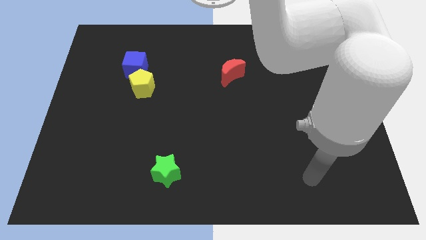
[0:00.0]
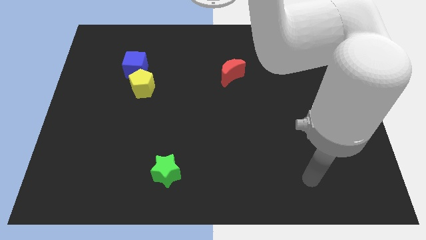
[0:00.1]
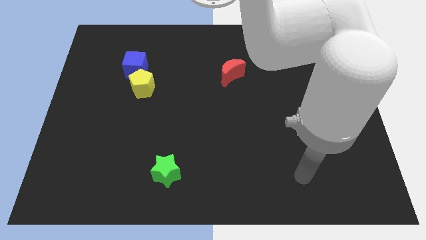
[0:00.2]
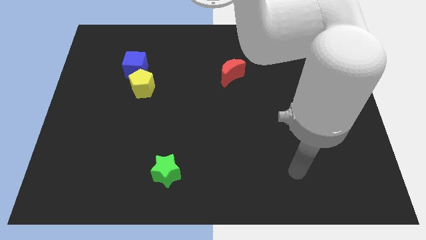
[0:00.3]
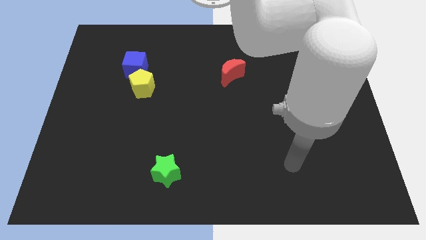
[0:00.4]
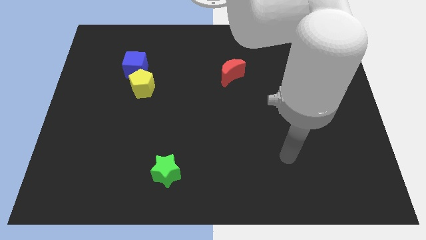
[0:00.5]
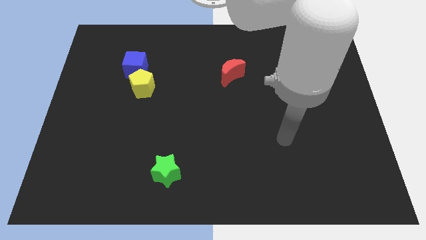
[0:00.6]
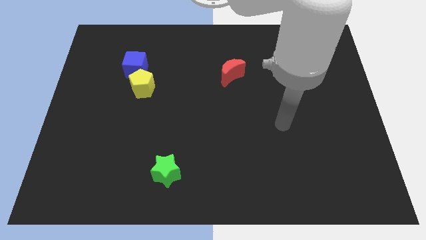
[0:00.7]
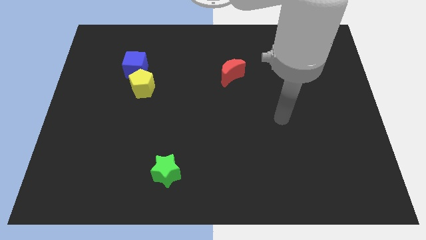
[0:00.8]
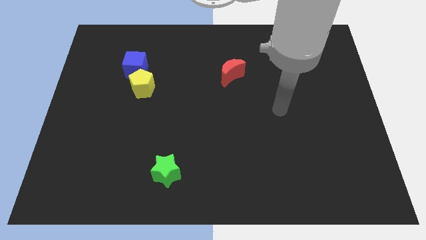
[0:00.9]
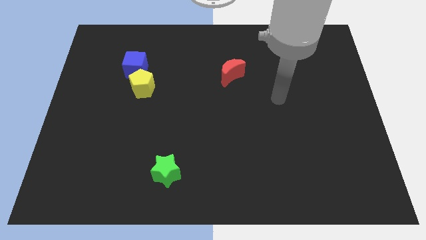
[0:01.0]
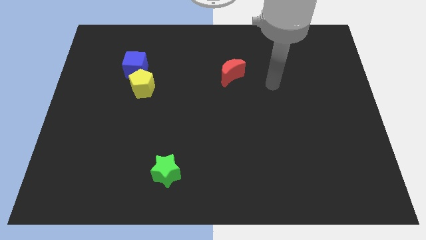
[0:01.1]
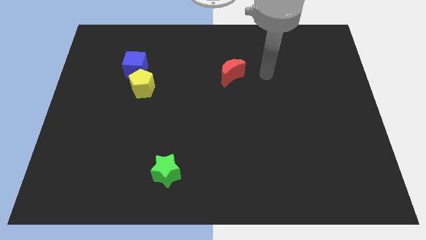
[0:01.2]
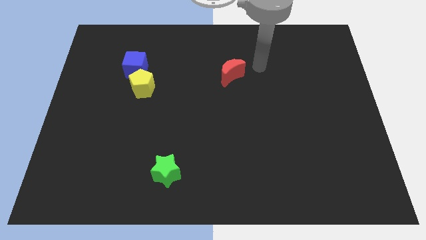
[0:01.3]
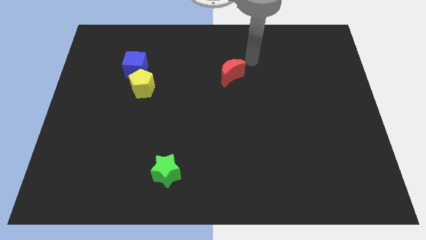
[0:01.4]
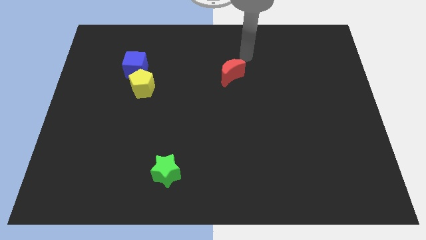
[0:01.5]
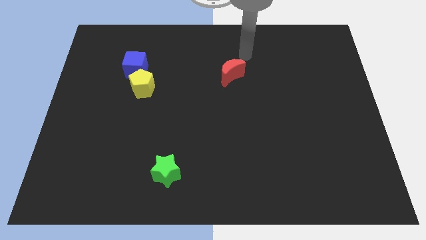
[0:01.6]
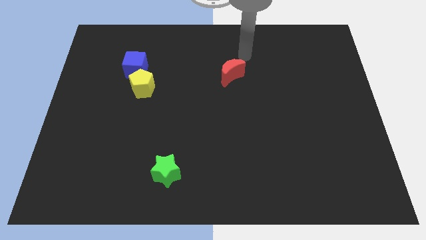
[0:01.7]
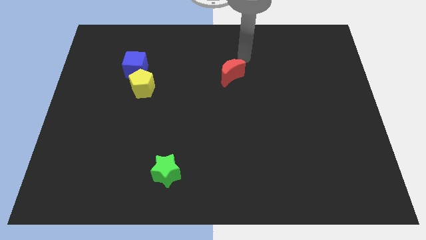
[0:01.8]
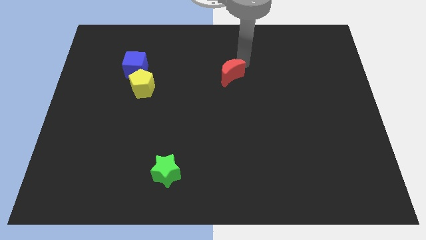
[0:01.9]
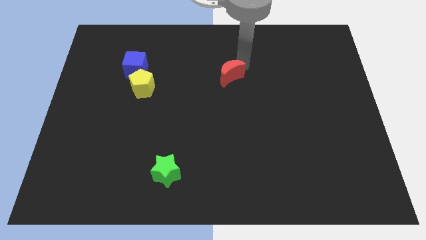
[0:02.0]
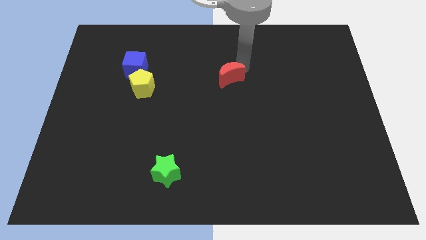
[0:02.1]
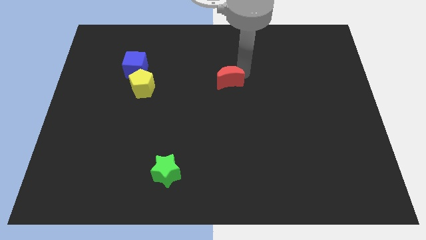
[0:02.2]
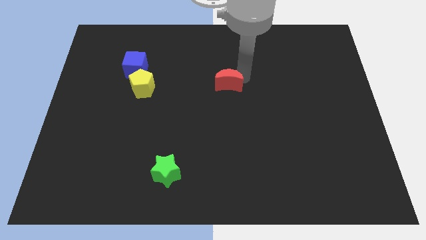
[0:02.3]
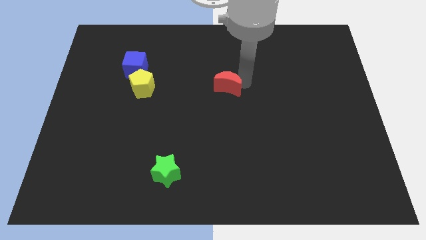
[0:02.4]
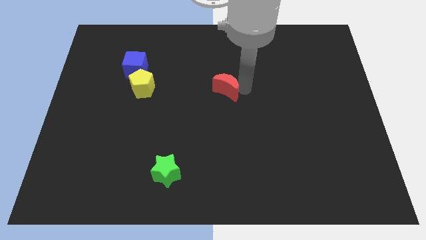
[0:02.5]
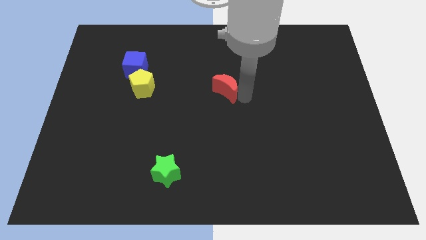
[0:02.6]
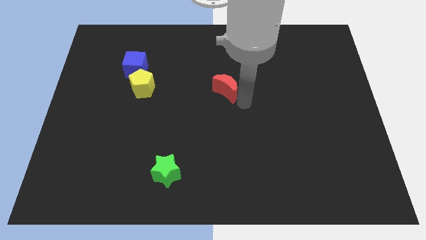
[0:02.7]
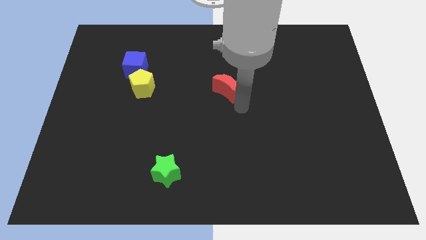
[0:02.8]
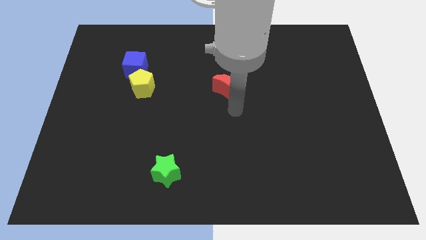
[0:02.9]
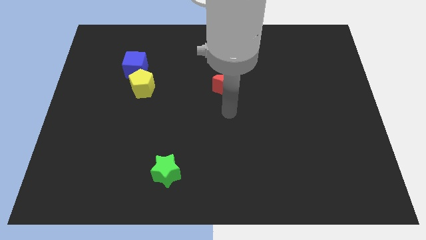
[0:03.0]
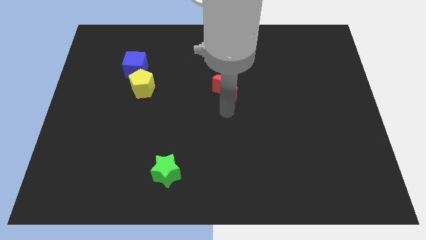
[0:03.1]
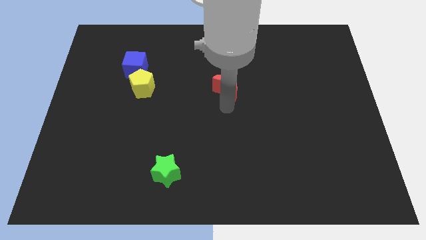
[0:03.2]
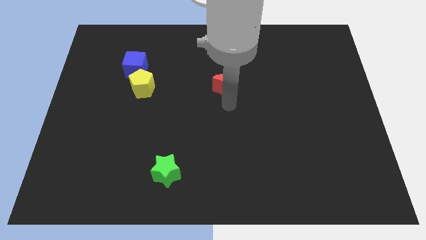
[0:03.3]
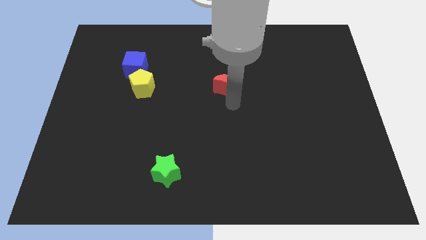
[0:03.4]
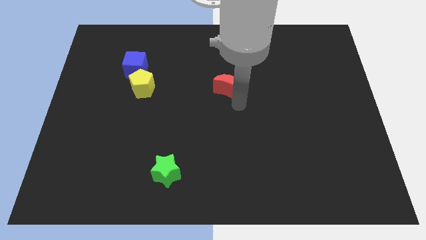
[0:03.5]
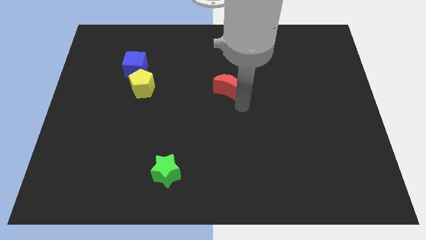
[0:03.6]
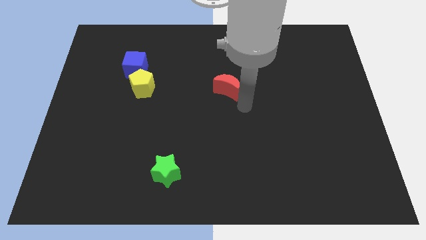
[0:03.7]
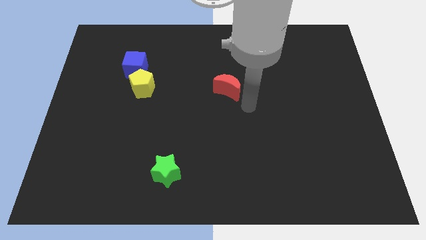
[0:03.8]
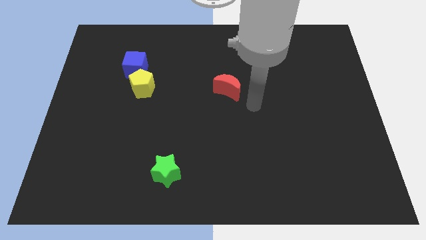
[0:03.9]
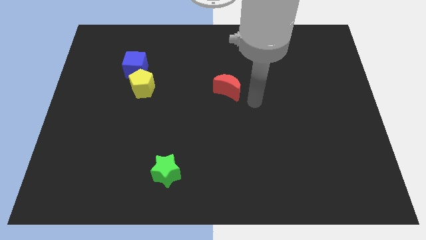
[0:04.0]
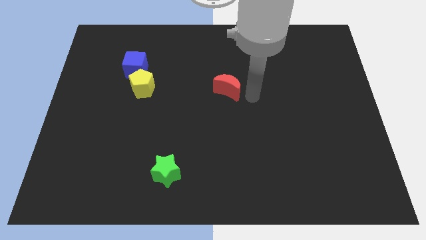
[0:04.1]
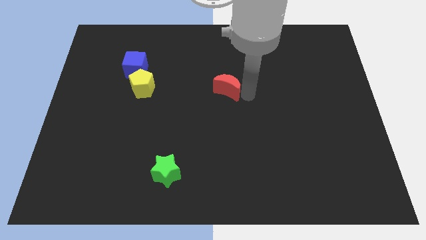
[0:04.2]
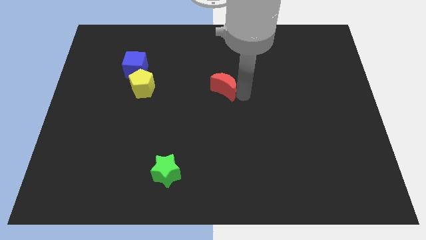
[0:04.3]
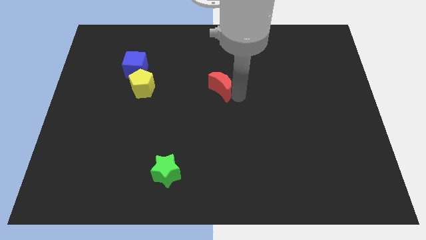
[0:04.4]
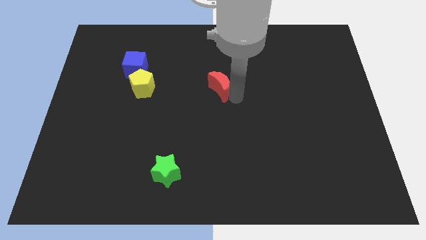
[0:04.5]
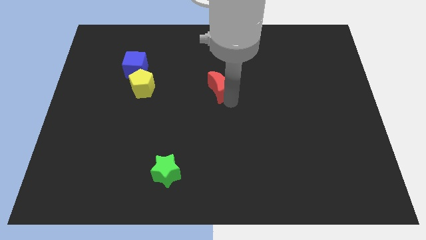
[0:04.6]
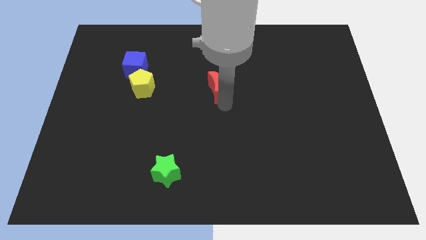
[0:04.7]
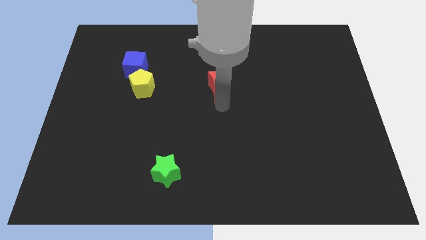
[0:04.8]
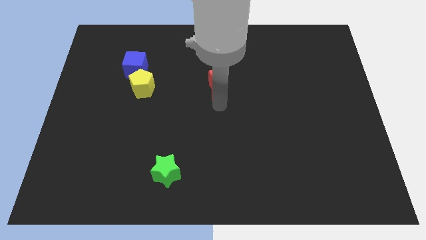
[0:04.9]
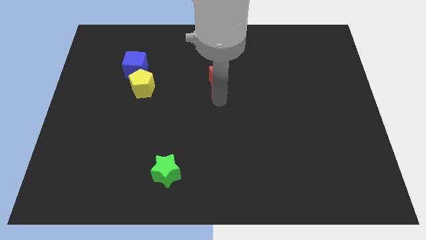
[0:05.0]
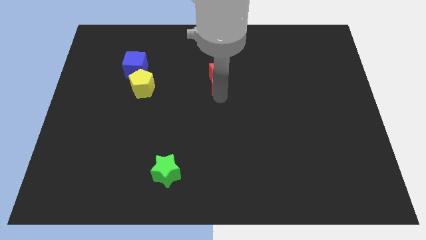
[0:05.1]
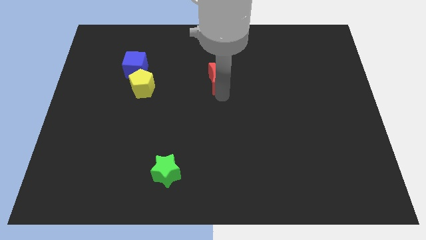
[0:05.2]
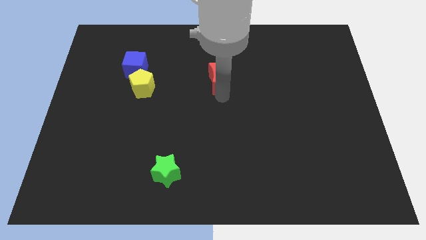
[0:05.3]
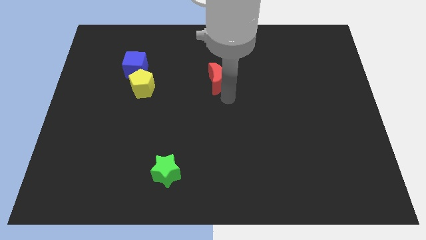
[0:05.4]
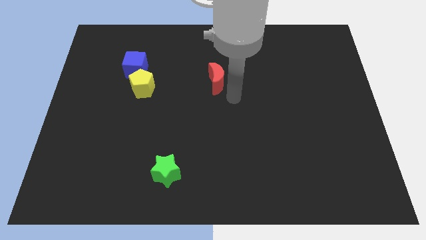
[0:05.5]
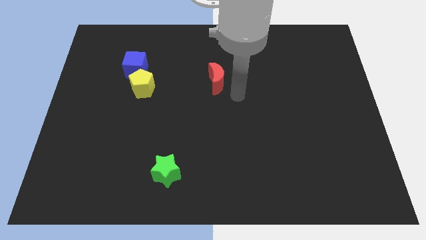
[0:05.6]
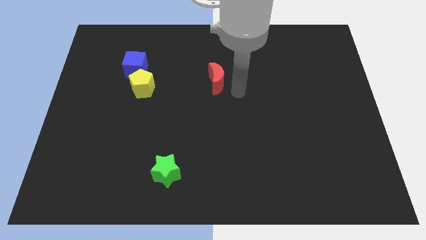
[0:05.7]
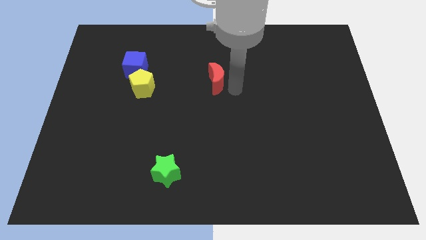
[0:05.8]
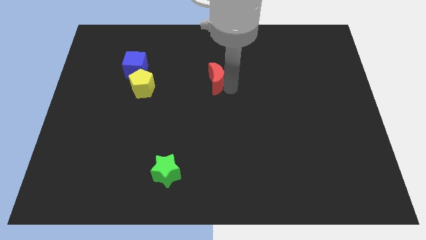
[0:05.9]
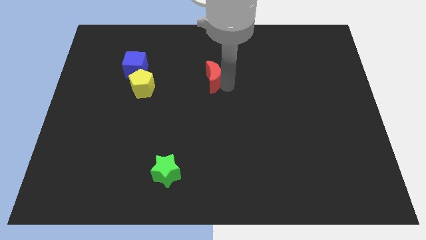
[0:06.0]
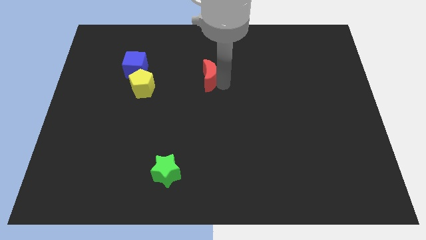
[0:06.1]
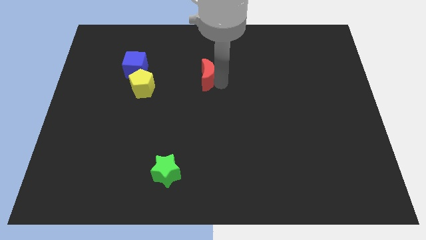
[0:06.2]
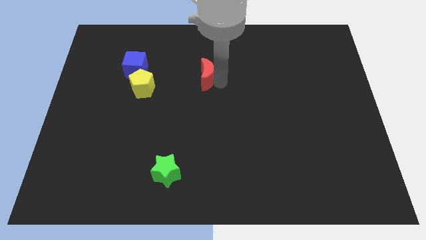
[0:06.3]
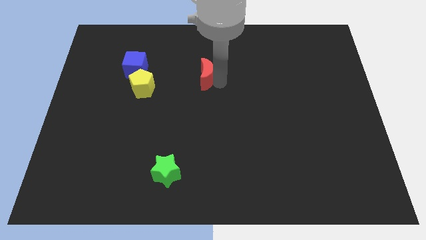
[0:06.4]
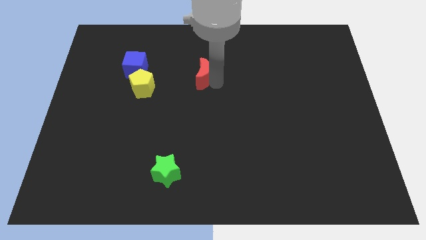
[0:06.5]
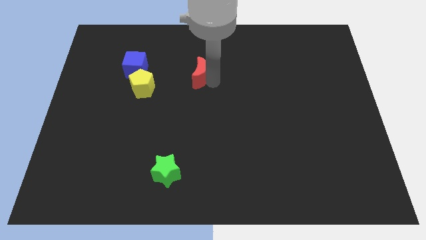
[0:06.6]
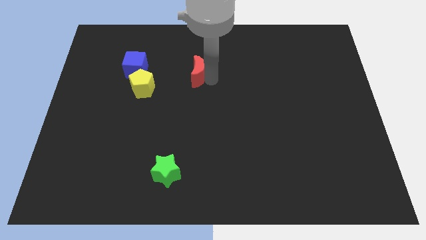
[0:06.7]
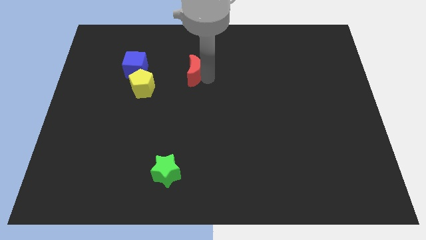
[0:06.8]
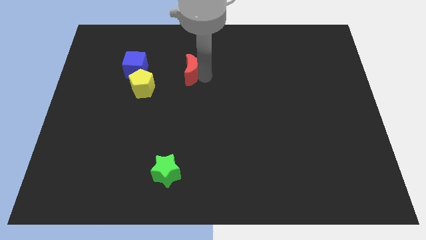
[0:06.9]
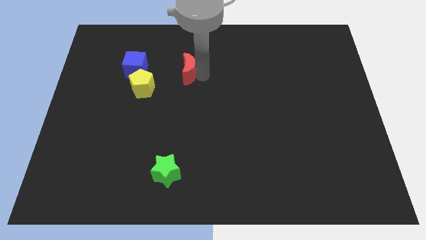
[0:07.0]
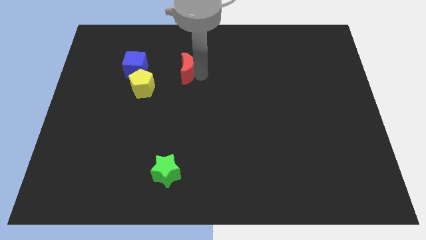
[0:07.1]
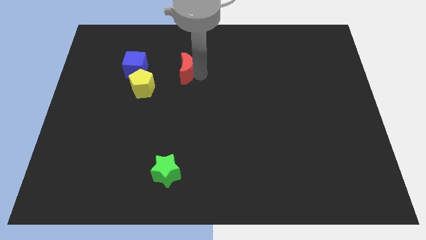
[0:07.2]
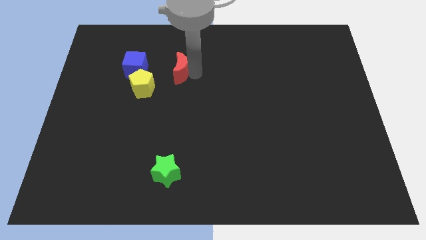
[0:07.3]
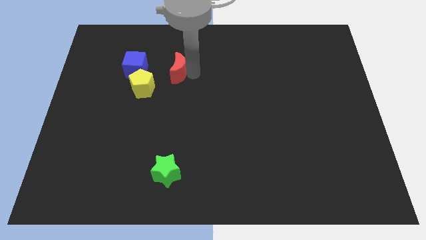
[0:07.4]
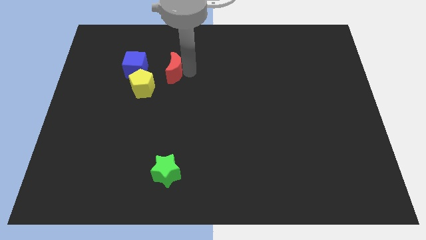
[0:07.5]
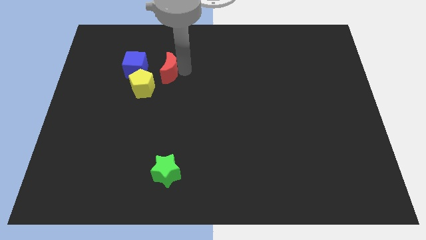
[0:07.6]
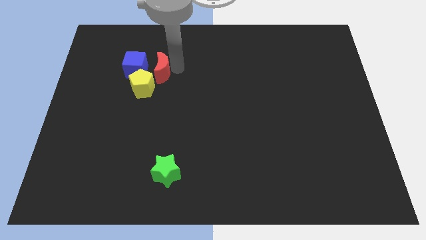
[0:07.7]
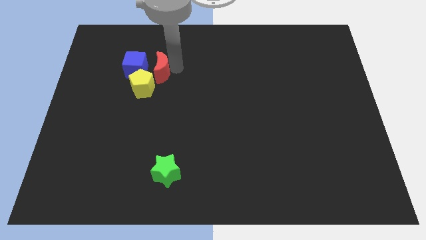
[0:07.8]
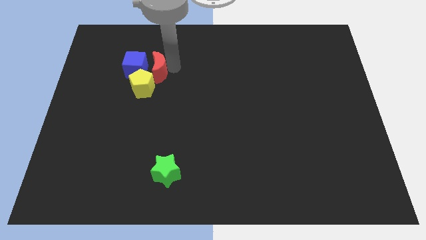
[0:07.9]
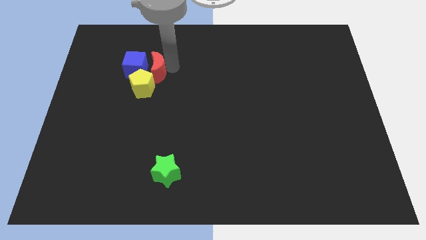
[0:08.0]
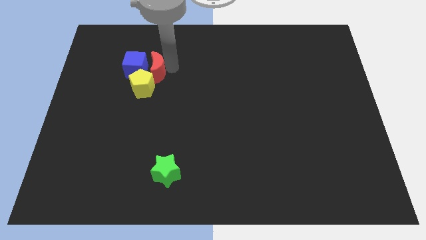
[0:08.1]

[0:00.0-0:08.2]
slide the red block to the cube

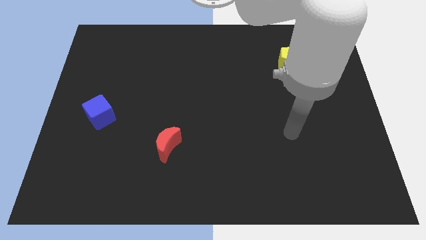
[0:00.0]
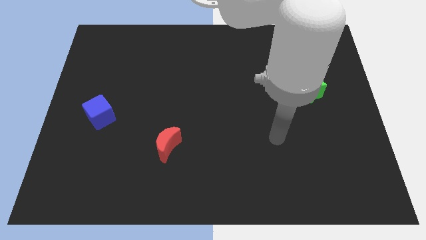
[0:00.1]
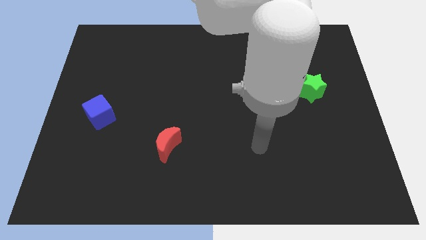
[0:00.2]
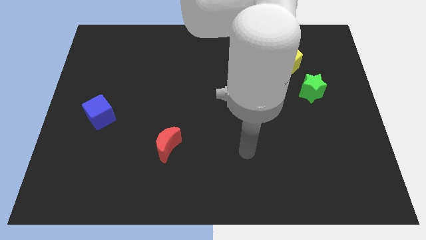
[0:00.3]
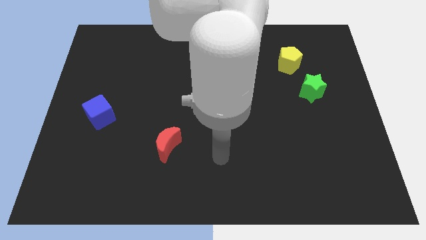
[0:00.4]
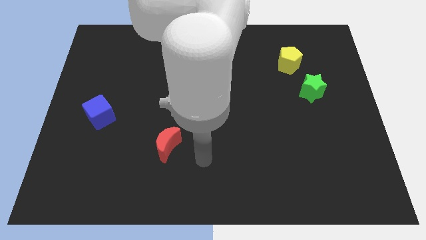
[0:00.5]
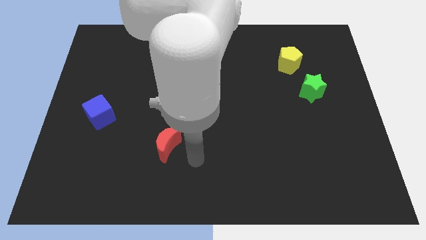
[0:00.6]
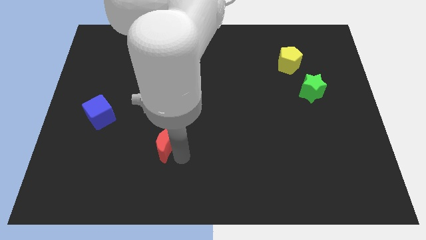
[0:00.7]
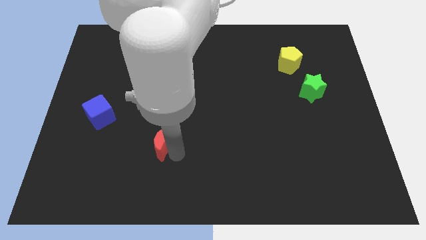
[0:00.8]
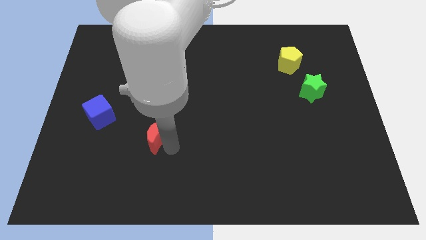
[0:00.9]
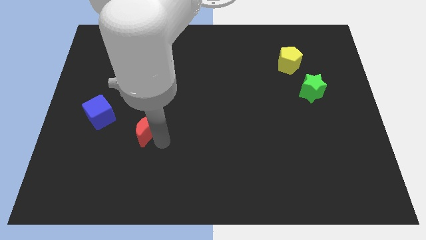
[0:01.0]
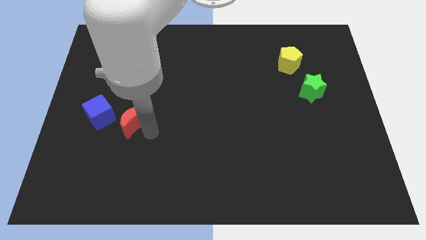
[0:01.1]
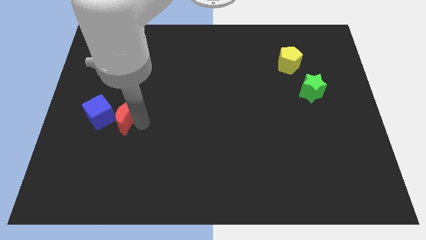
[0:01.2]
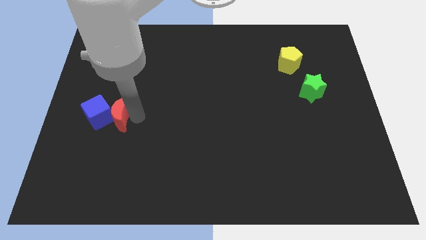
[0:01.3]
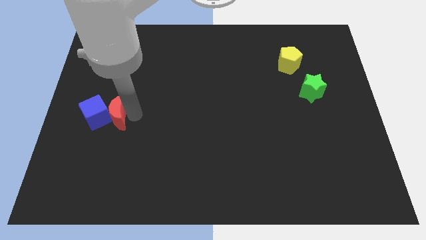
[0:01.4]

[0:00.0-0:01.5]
push the red moon next to the cube
